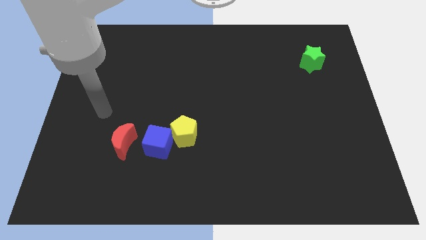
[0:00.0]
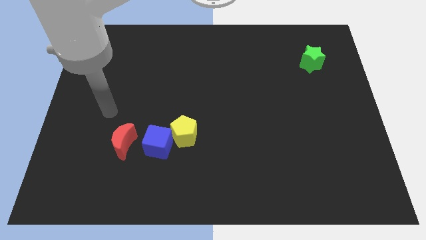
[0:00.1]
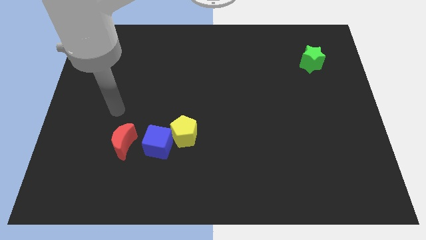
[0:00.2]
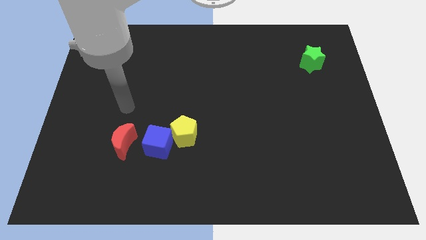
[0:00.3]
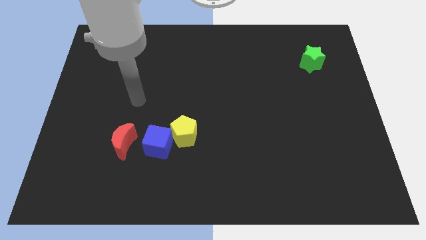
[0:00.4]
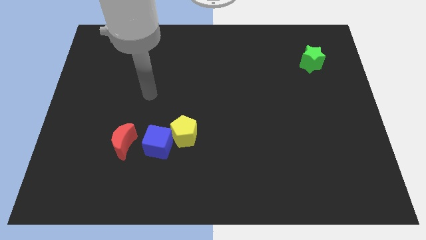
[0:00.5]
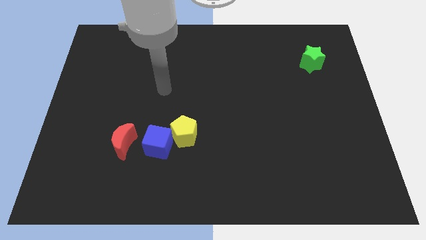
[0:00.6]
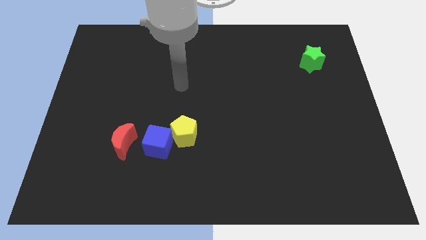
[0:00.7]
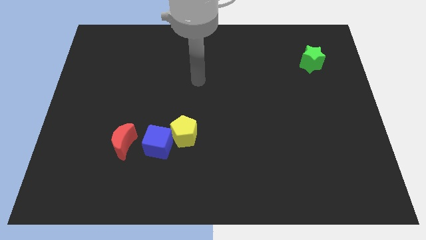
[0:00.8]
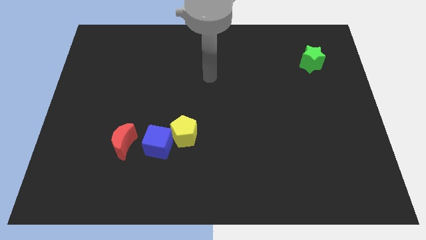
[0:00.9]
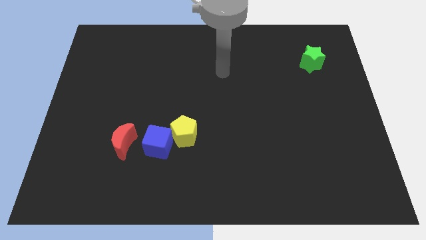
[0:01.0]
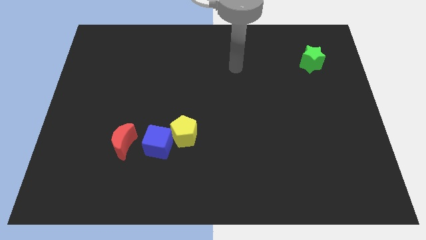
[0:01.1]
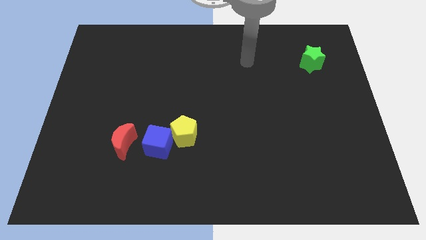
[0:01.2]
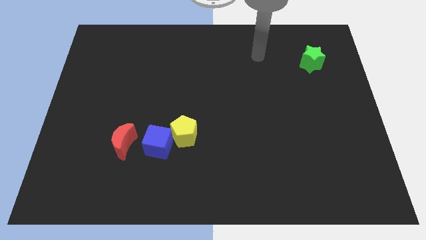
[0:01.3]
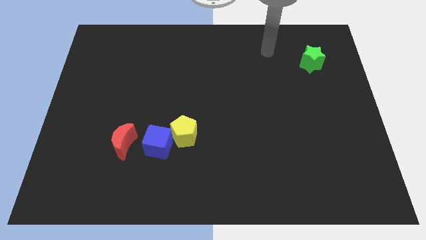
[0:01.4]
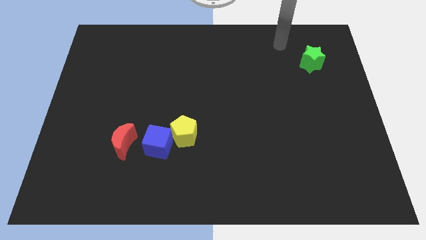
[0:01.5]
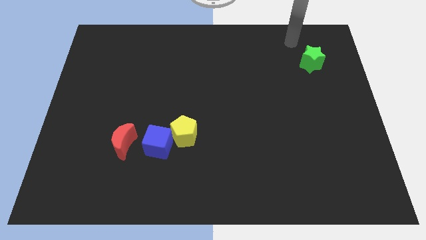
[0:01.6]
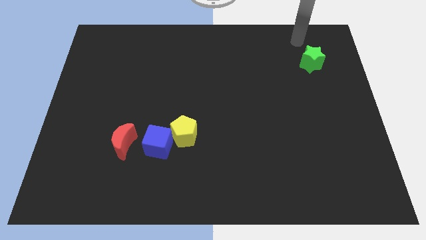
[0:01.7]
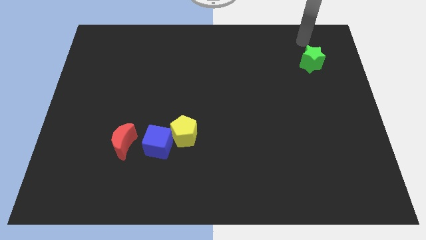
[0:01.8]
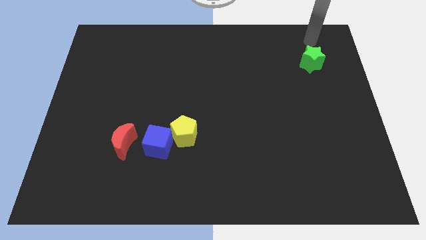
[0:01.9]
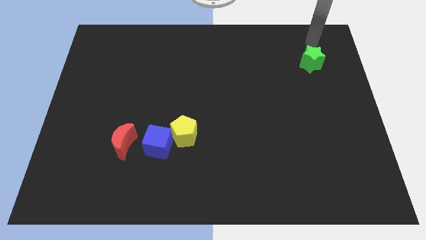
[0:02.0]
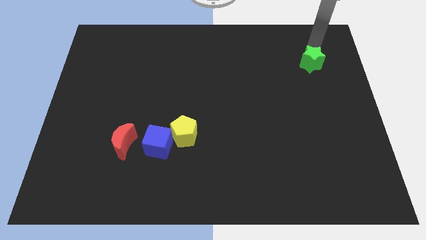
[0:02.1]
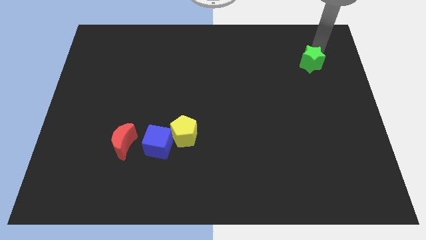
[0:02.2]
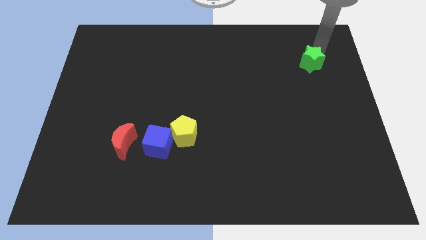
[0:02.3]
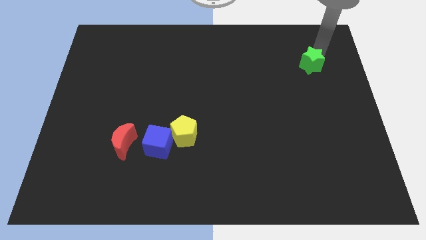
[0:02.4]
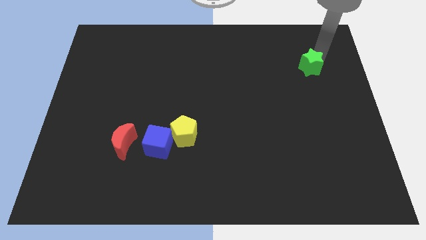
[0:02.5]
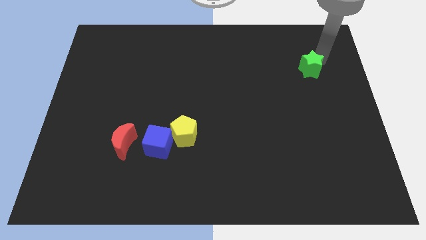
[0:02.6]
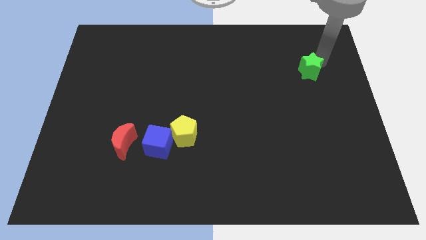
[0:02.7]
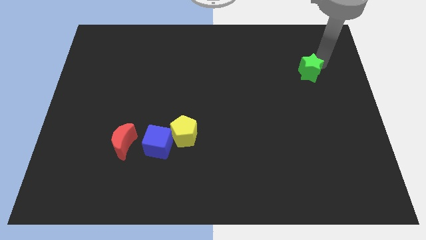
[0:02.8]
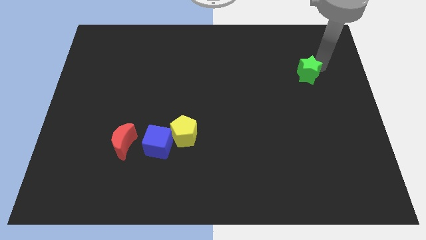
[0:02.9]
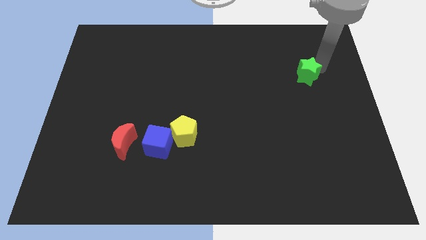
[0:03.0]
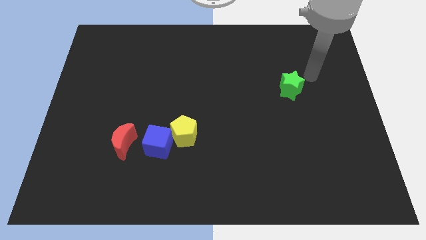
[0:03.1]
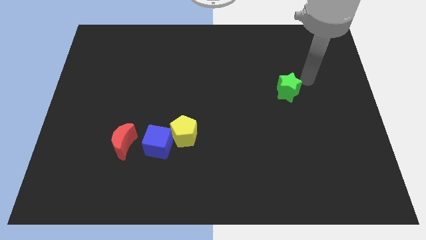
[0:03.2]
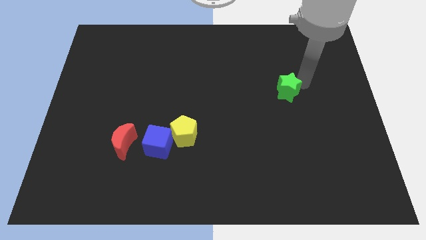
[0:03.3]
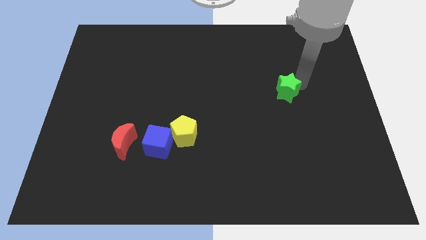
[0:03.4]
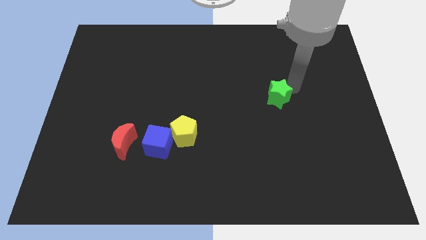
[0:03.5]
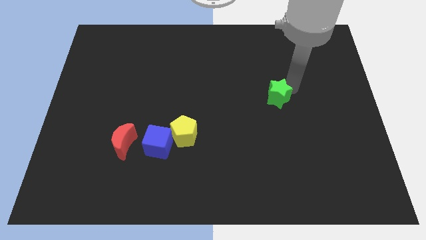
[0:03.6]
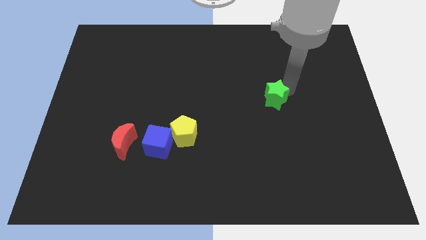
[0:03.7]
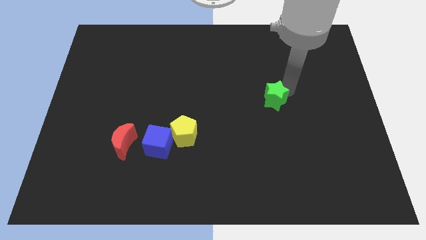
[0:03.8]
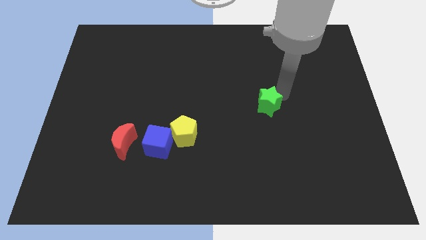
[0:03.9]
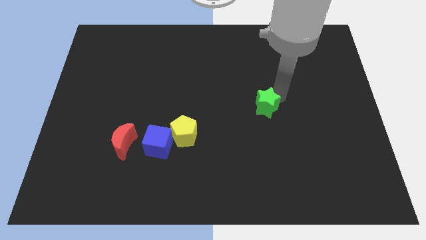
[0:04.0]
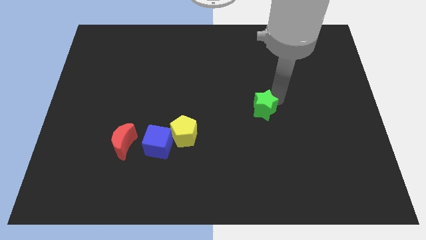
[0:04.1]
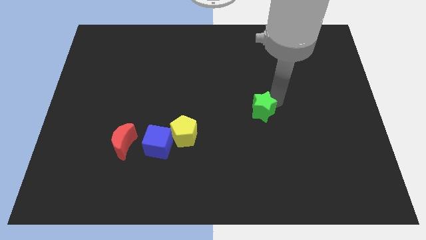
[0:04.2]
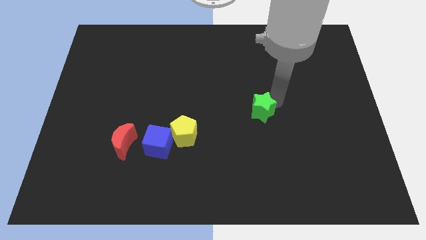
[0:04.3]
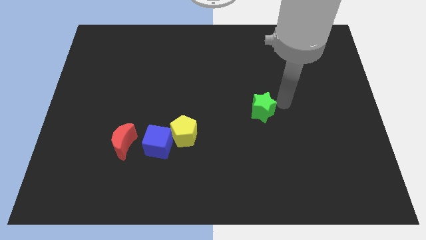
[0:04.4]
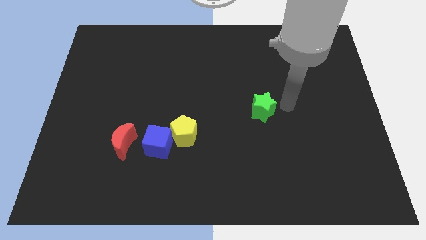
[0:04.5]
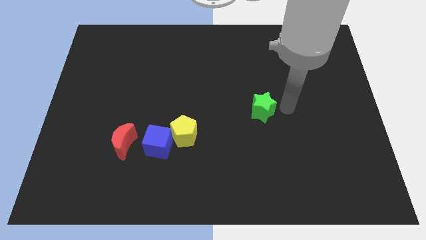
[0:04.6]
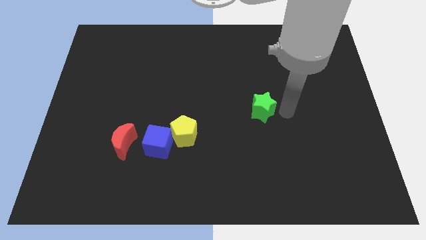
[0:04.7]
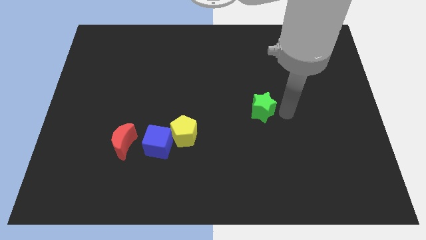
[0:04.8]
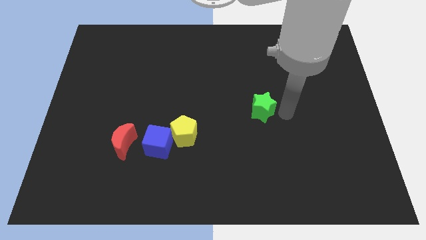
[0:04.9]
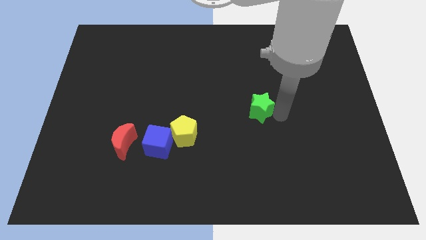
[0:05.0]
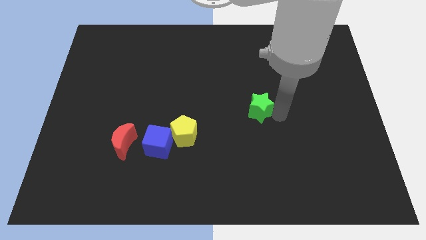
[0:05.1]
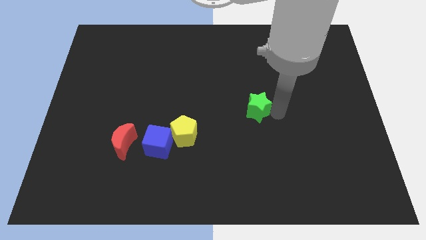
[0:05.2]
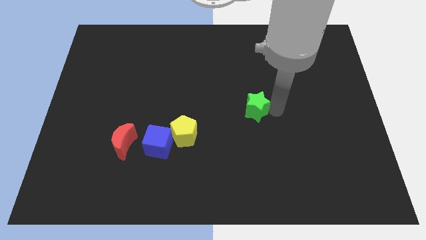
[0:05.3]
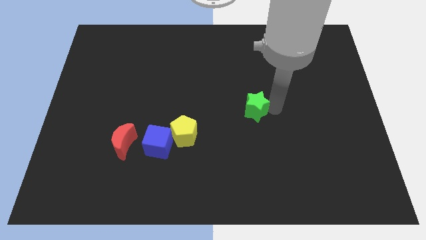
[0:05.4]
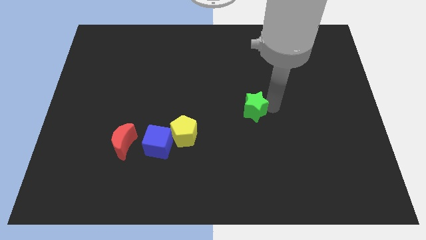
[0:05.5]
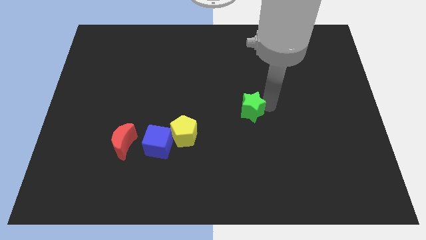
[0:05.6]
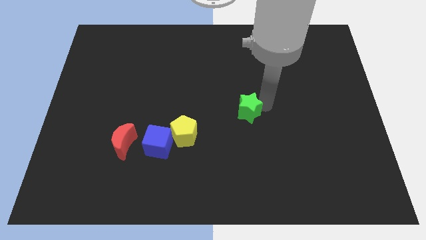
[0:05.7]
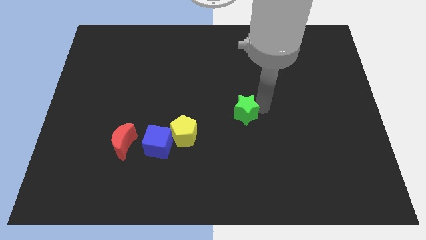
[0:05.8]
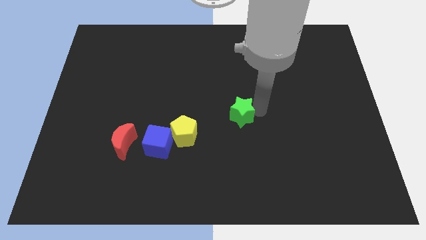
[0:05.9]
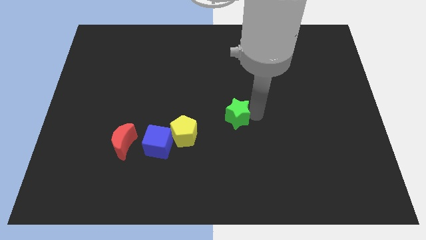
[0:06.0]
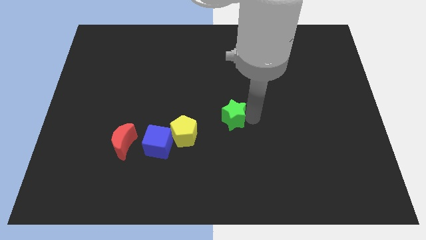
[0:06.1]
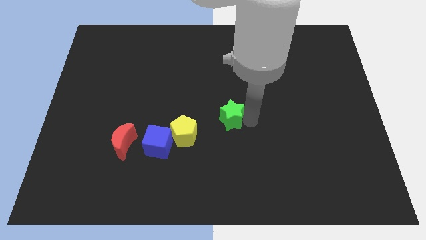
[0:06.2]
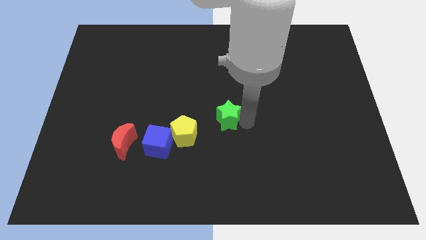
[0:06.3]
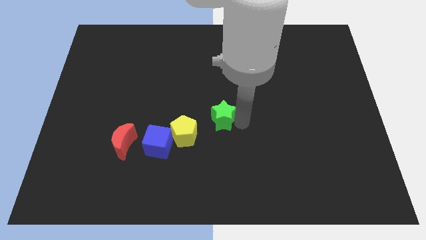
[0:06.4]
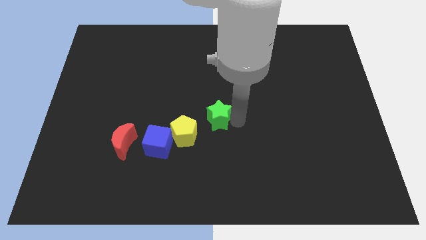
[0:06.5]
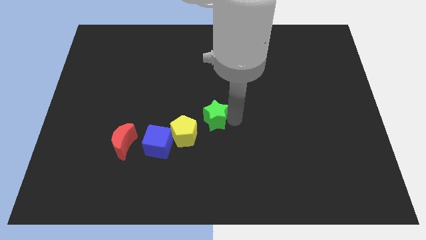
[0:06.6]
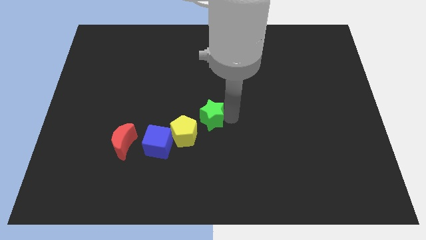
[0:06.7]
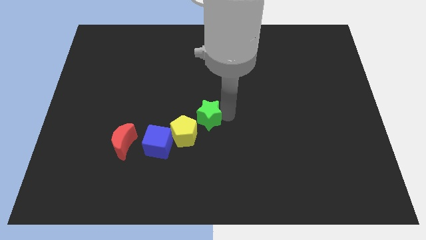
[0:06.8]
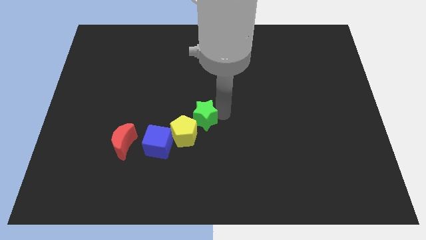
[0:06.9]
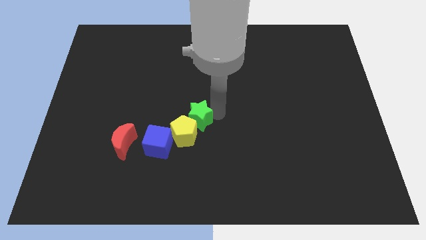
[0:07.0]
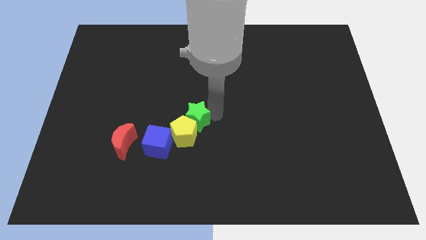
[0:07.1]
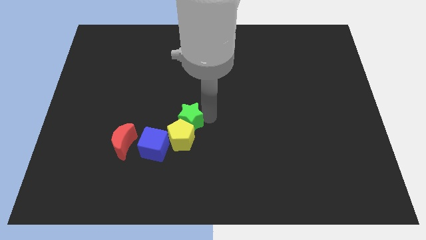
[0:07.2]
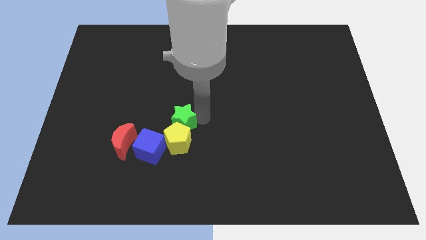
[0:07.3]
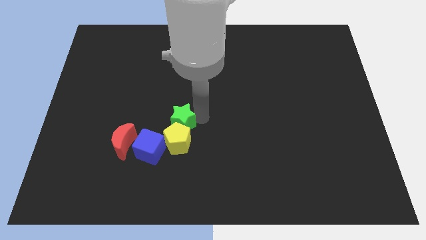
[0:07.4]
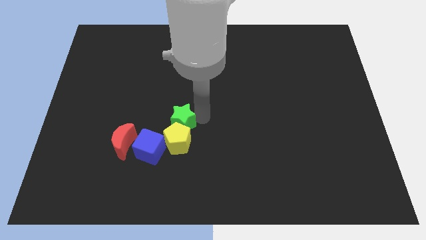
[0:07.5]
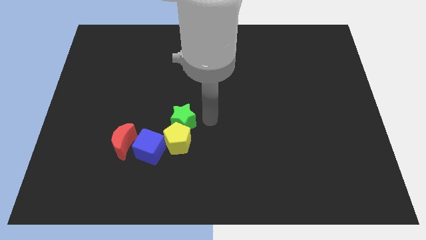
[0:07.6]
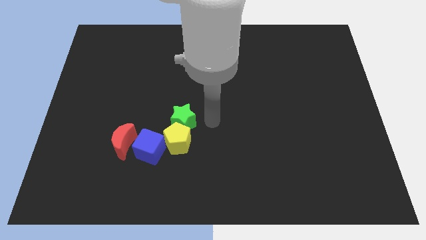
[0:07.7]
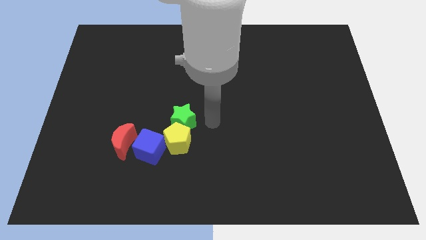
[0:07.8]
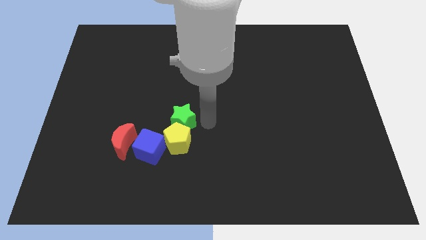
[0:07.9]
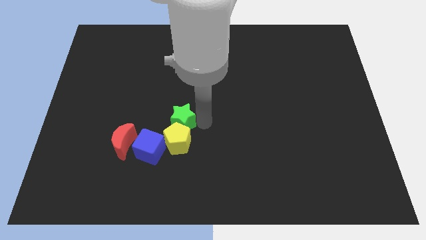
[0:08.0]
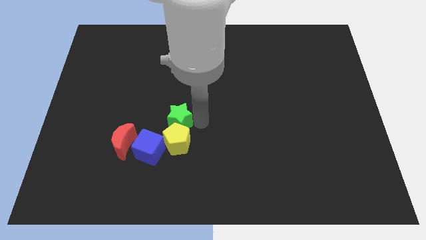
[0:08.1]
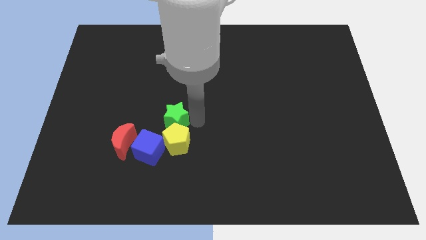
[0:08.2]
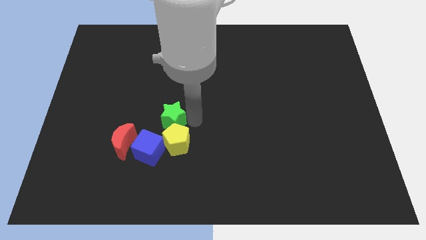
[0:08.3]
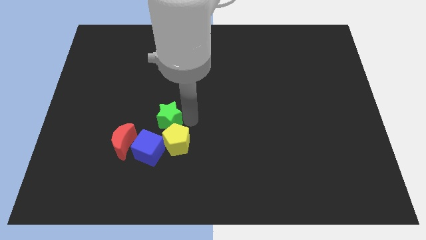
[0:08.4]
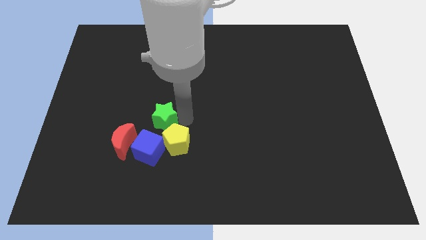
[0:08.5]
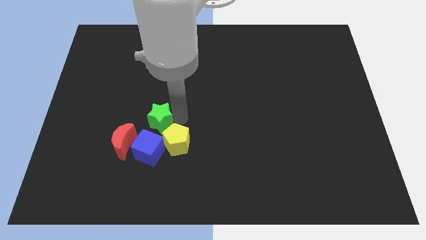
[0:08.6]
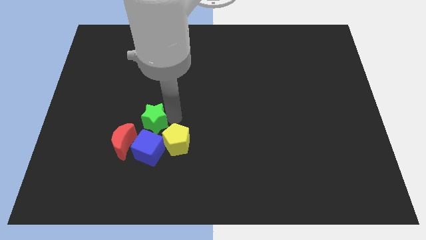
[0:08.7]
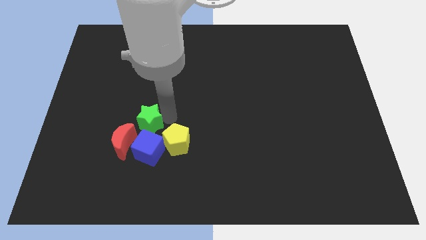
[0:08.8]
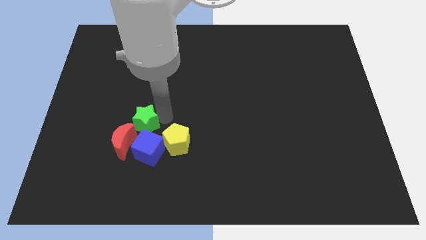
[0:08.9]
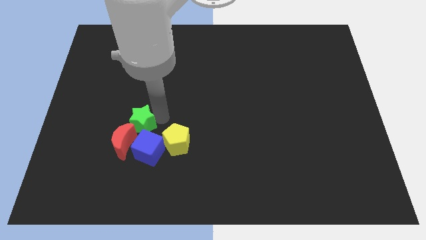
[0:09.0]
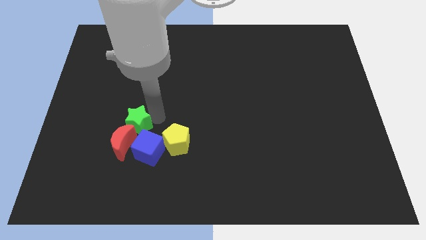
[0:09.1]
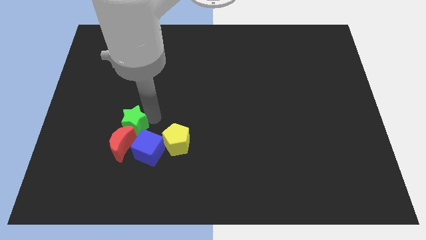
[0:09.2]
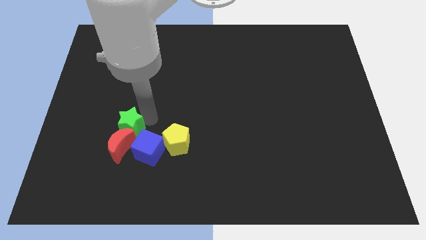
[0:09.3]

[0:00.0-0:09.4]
push the green star close to the red moon
